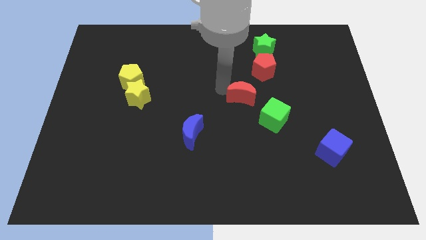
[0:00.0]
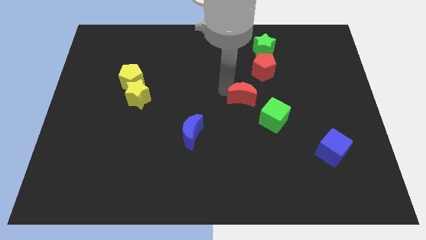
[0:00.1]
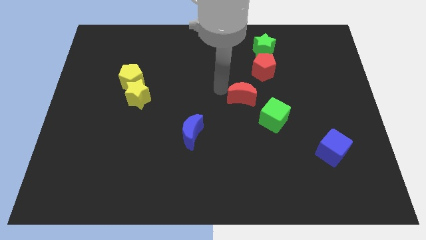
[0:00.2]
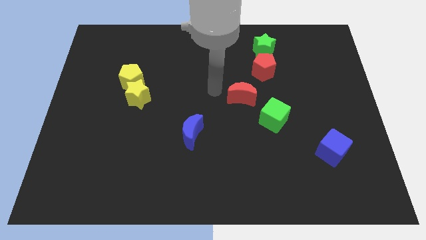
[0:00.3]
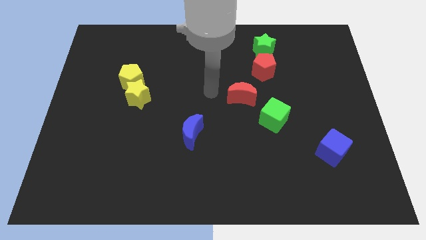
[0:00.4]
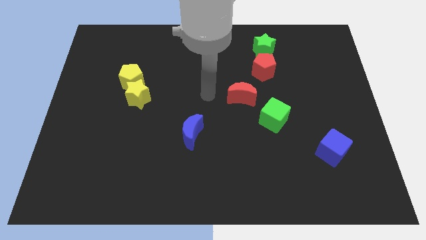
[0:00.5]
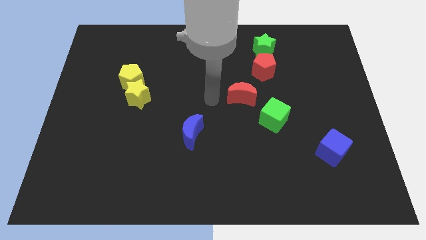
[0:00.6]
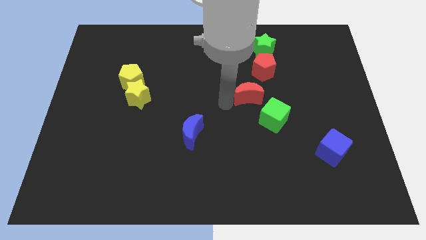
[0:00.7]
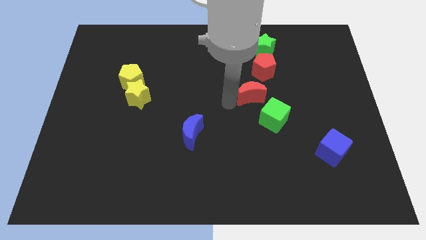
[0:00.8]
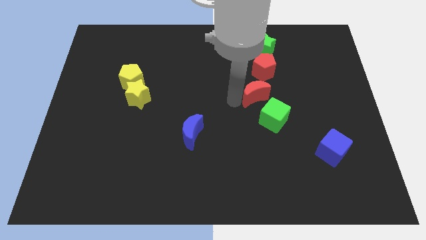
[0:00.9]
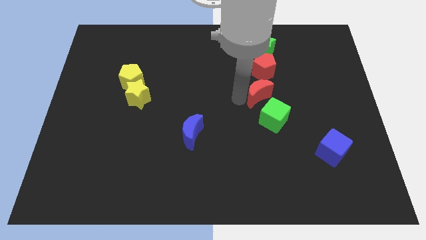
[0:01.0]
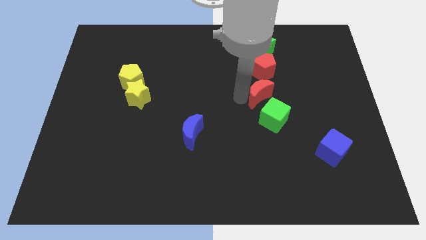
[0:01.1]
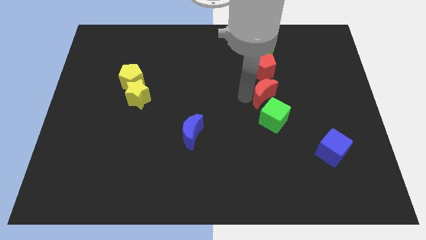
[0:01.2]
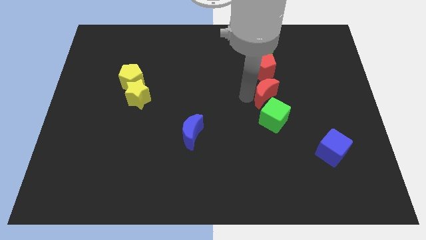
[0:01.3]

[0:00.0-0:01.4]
place the red crescent below the red pentagon

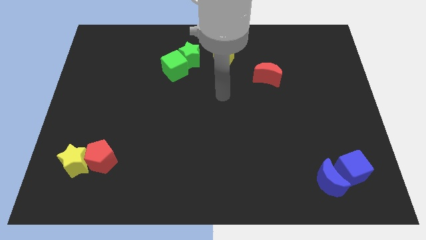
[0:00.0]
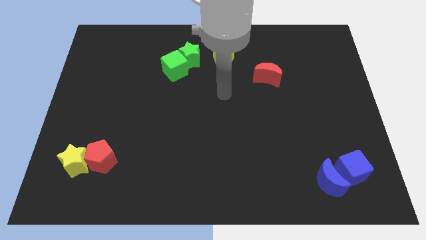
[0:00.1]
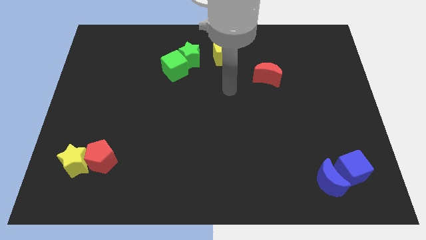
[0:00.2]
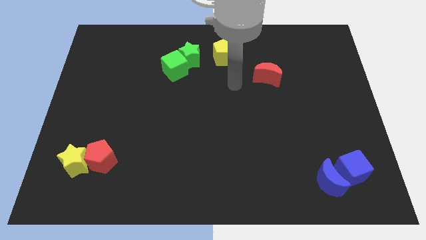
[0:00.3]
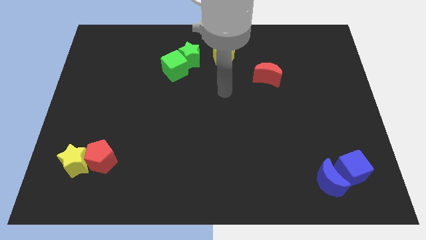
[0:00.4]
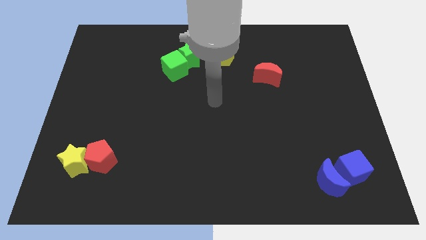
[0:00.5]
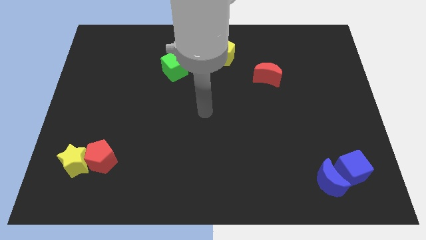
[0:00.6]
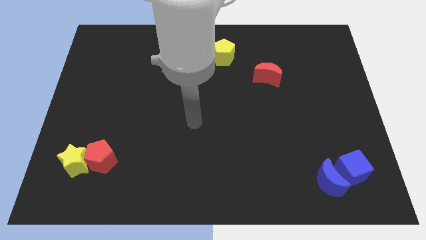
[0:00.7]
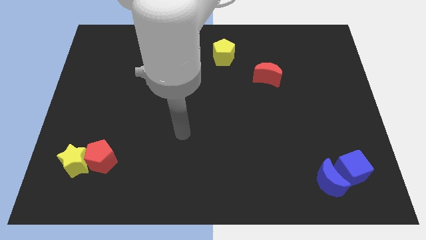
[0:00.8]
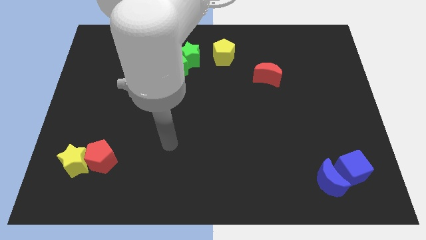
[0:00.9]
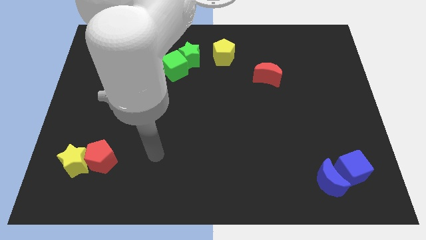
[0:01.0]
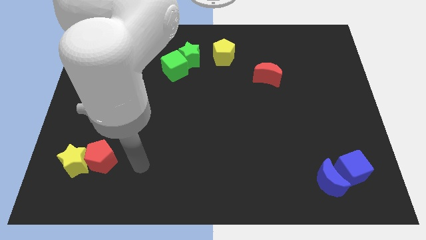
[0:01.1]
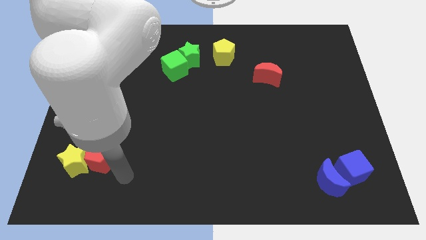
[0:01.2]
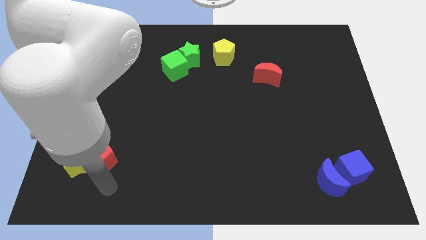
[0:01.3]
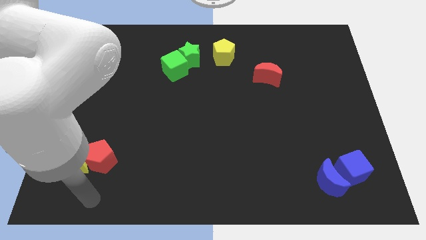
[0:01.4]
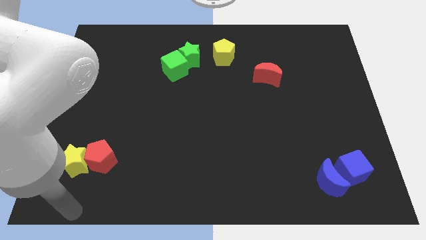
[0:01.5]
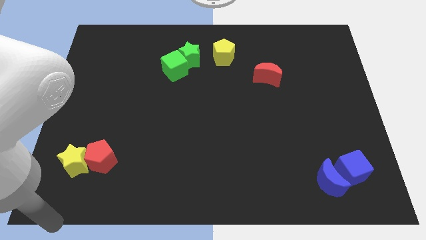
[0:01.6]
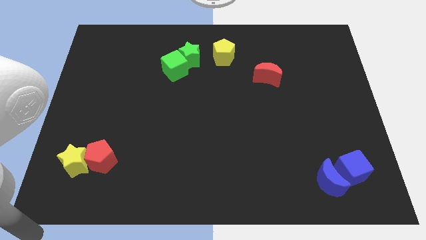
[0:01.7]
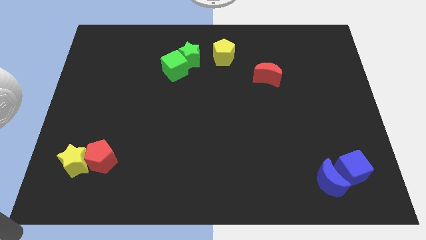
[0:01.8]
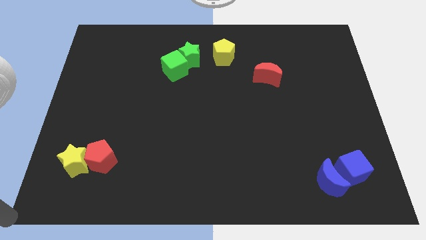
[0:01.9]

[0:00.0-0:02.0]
point your arm to the bottom left corner

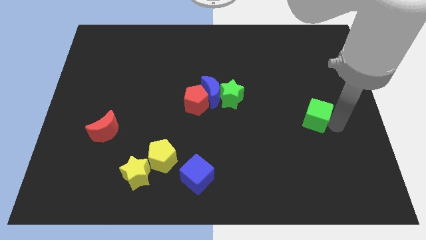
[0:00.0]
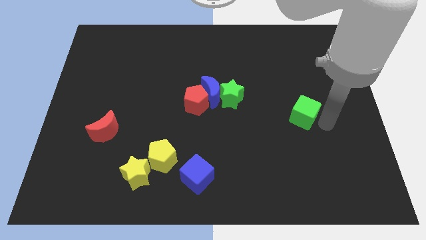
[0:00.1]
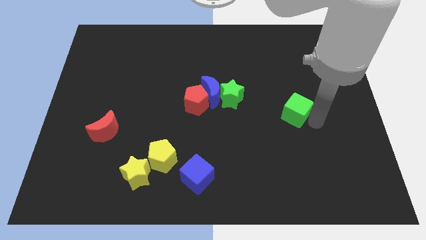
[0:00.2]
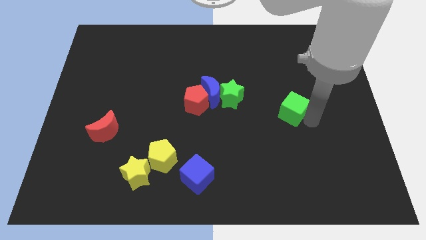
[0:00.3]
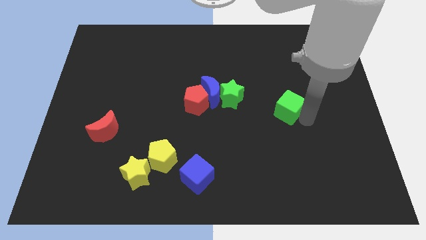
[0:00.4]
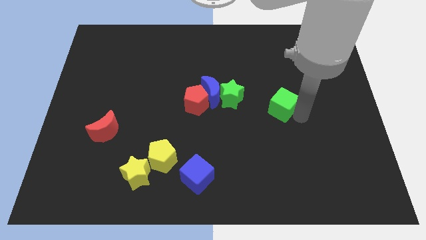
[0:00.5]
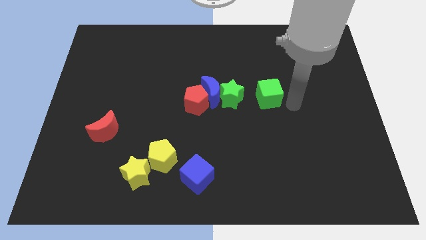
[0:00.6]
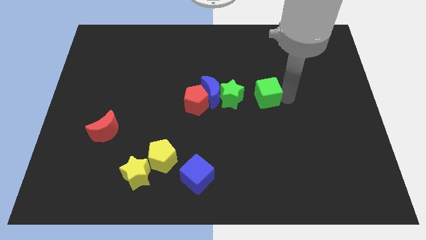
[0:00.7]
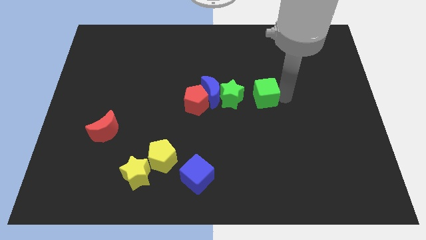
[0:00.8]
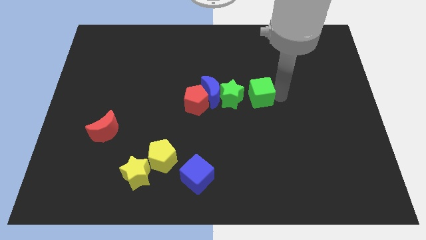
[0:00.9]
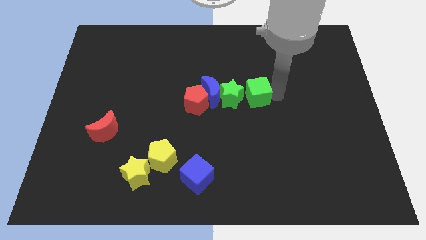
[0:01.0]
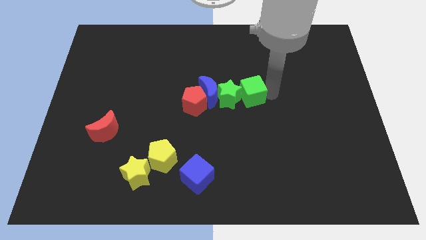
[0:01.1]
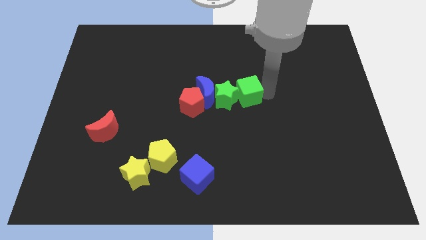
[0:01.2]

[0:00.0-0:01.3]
push the green cube to the right of the green star

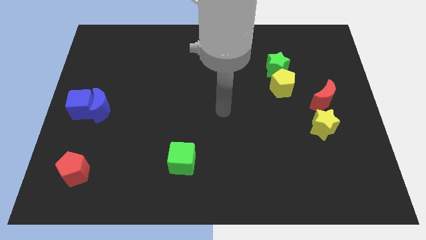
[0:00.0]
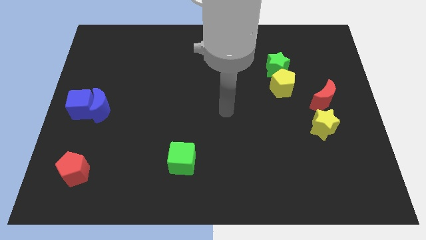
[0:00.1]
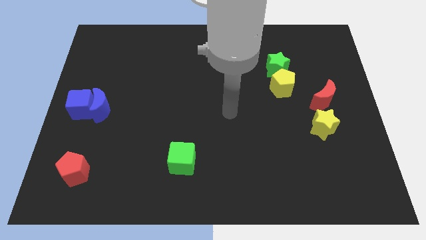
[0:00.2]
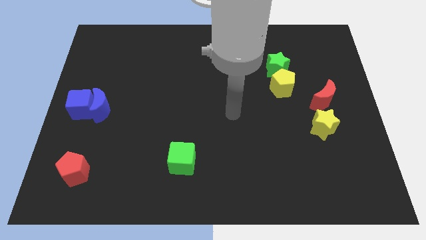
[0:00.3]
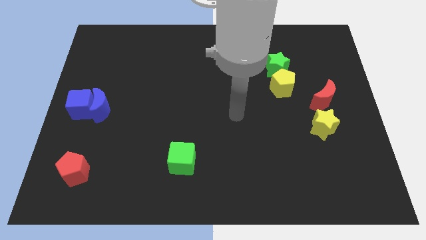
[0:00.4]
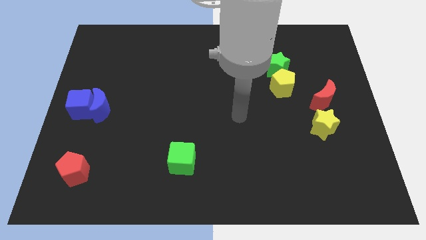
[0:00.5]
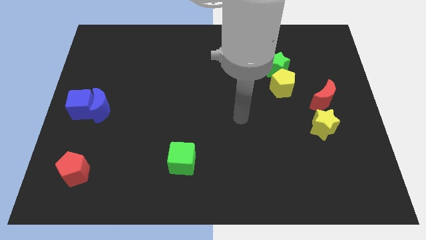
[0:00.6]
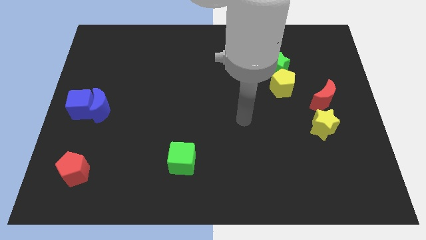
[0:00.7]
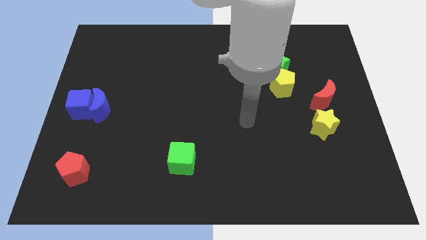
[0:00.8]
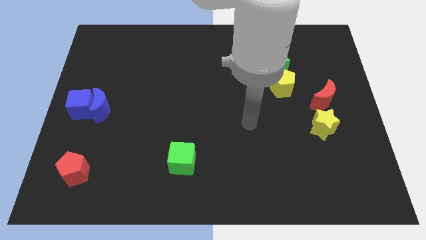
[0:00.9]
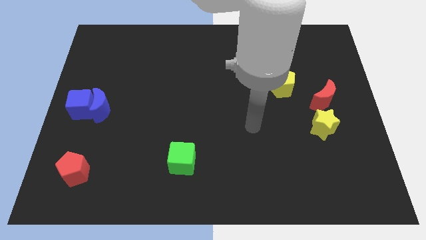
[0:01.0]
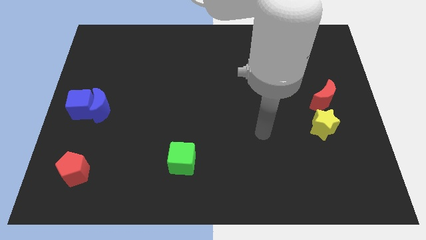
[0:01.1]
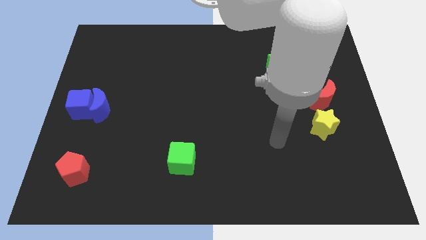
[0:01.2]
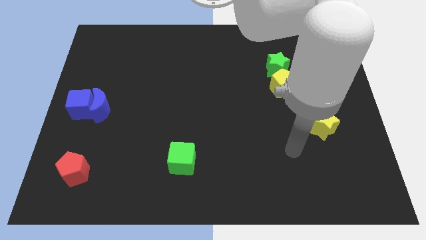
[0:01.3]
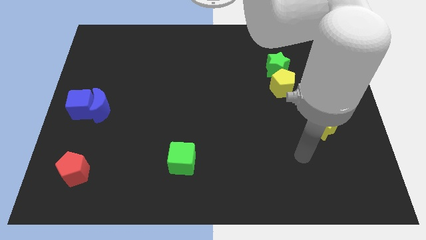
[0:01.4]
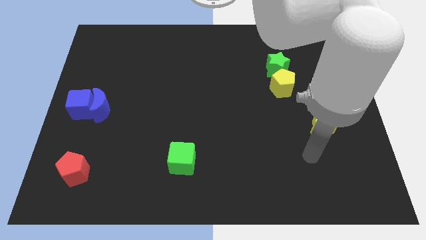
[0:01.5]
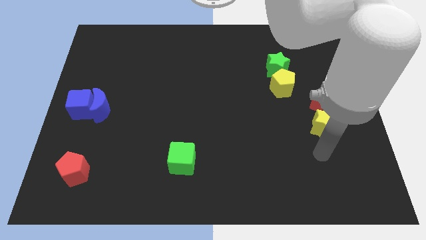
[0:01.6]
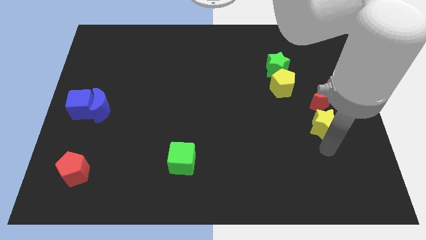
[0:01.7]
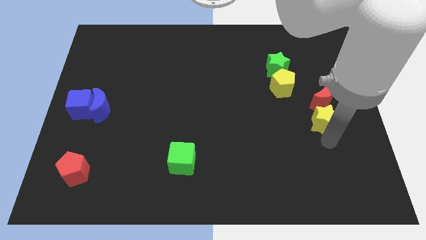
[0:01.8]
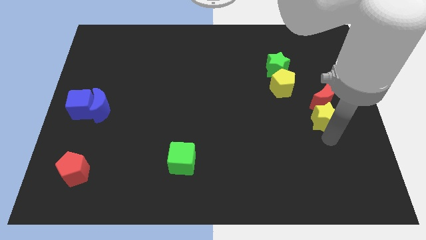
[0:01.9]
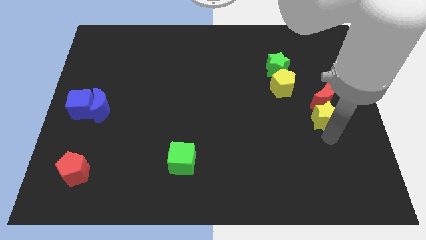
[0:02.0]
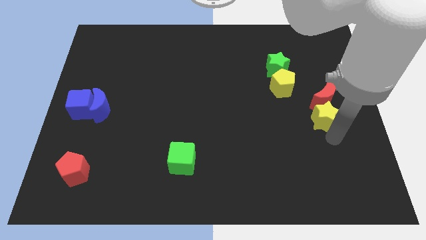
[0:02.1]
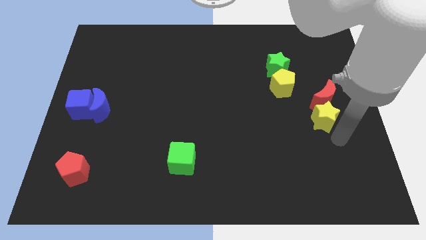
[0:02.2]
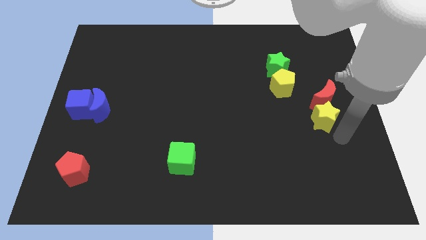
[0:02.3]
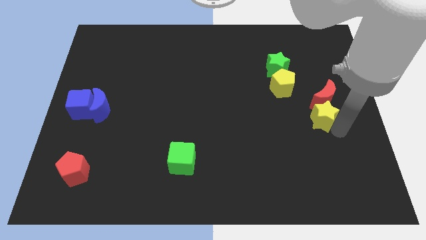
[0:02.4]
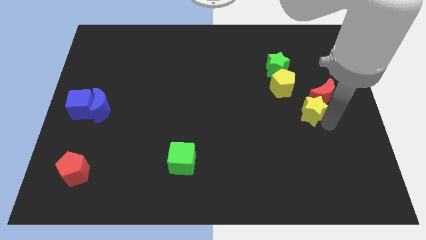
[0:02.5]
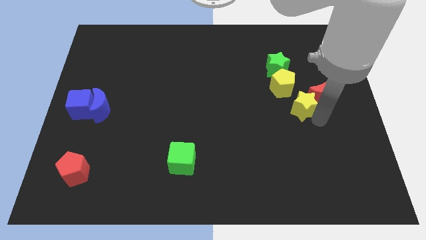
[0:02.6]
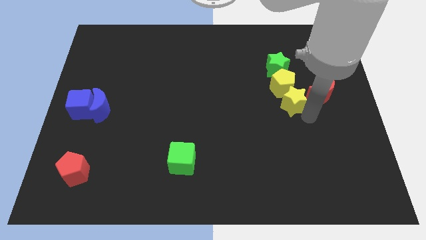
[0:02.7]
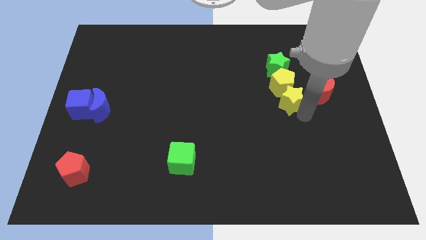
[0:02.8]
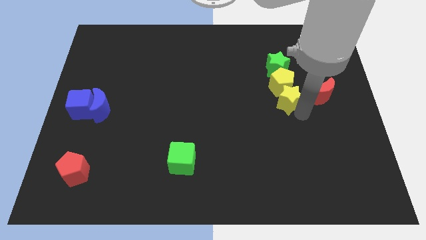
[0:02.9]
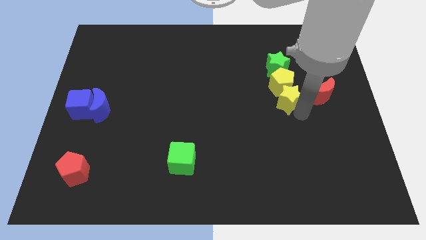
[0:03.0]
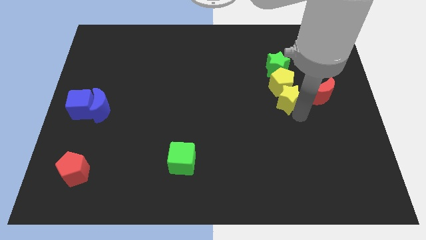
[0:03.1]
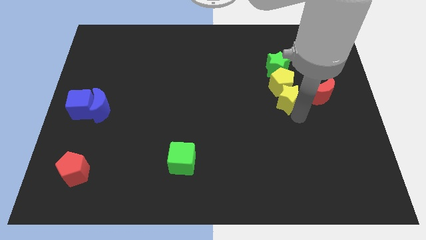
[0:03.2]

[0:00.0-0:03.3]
push the yellow star into the yellow pentagon

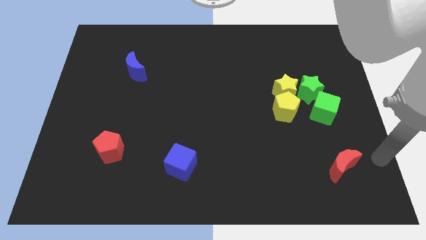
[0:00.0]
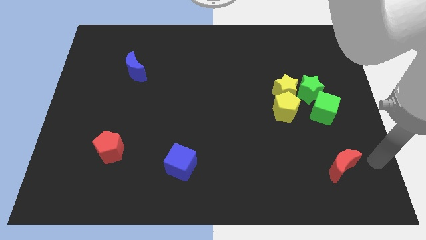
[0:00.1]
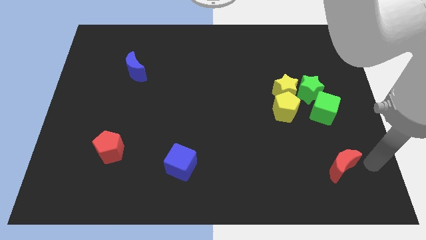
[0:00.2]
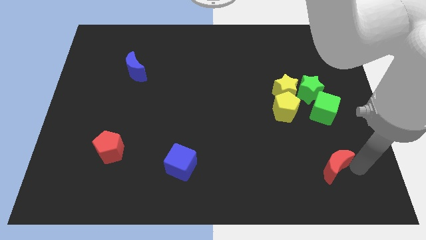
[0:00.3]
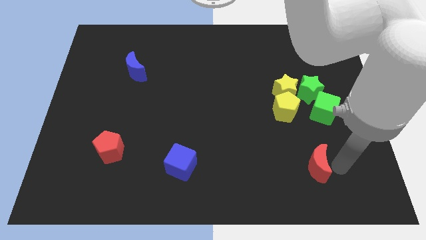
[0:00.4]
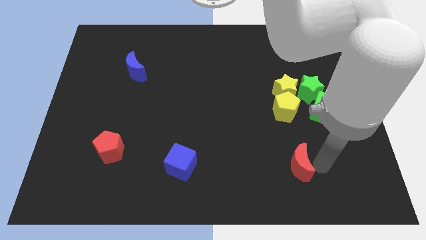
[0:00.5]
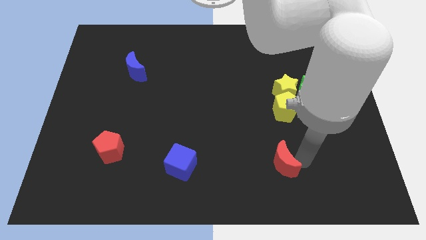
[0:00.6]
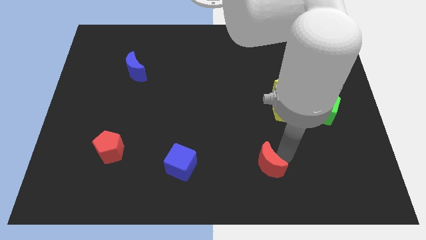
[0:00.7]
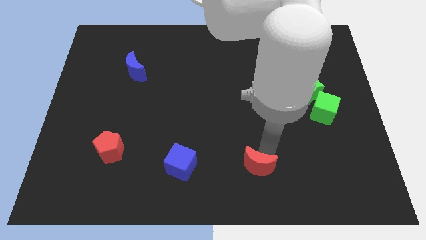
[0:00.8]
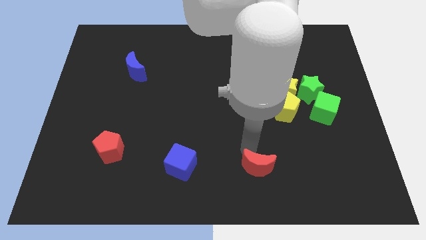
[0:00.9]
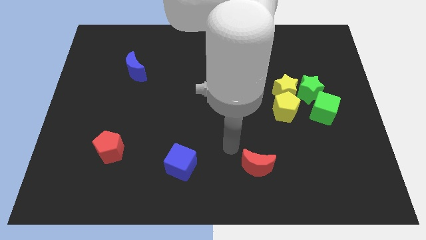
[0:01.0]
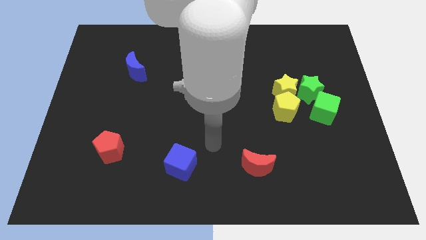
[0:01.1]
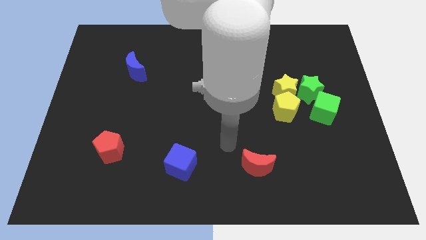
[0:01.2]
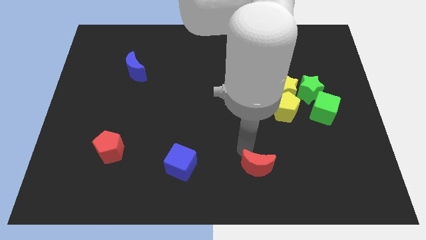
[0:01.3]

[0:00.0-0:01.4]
place the red moon diagonally bottom left to the yellow pentagon
